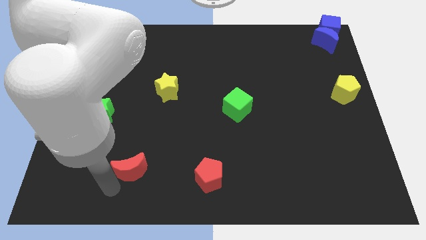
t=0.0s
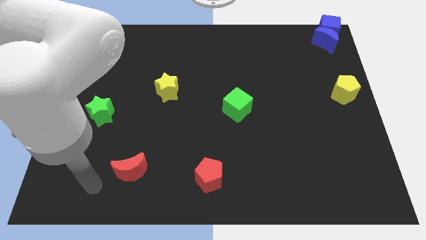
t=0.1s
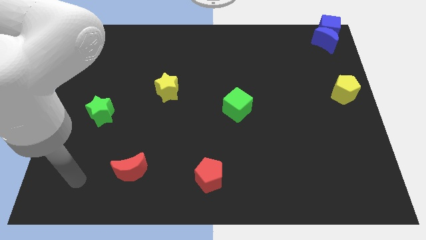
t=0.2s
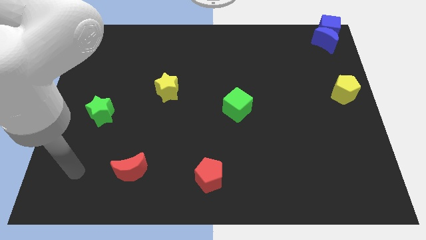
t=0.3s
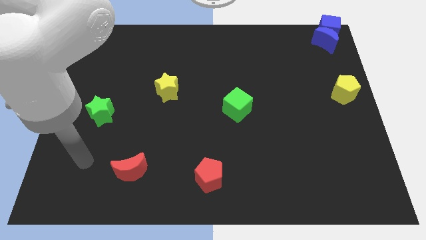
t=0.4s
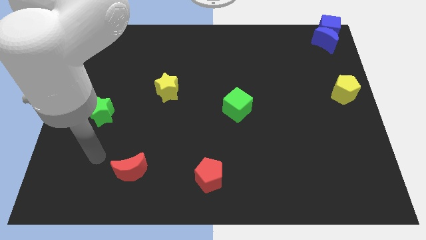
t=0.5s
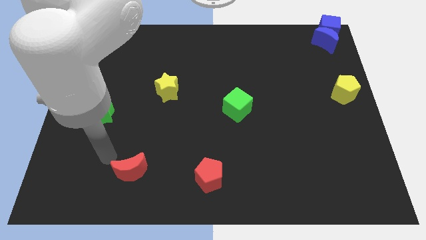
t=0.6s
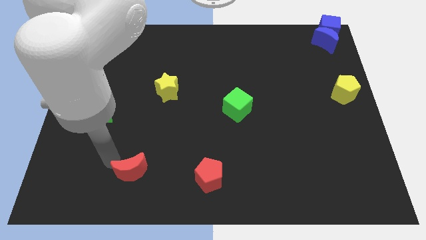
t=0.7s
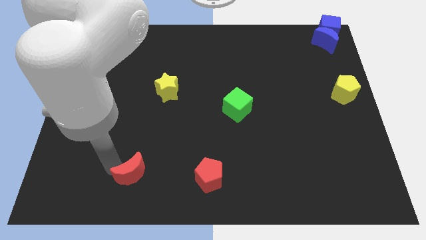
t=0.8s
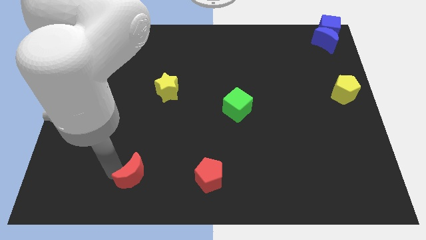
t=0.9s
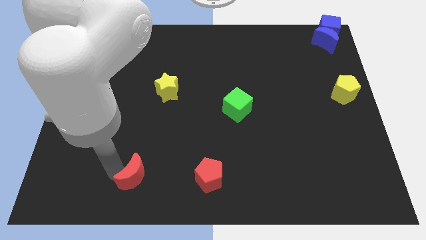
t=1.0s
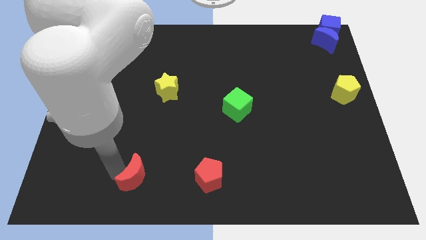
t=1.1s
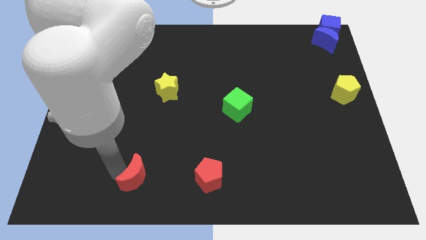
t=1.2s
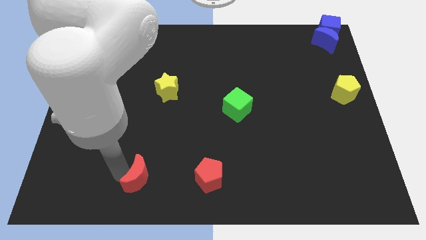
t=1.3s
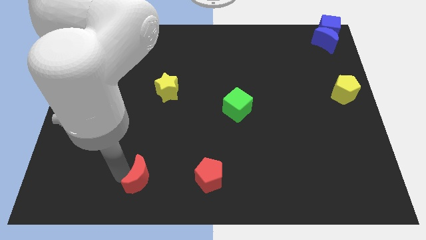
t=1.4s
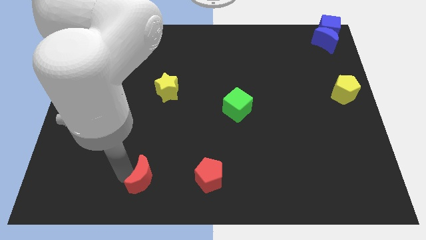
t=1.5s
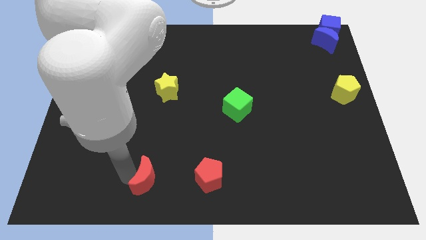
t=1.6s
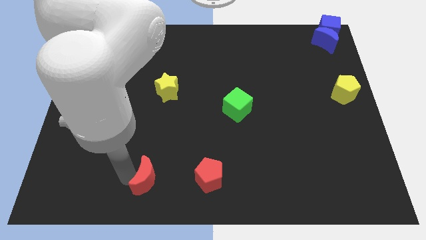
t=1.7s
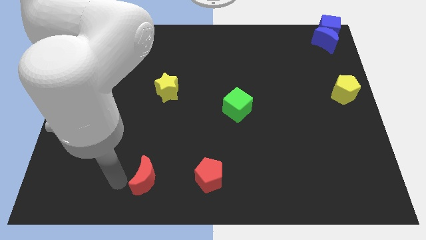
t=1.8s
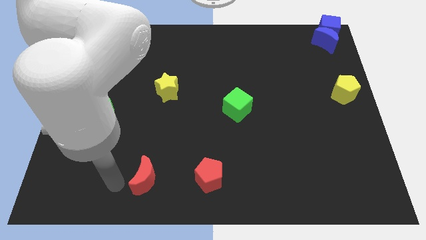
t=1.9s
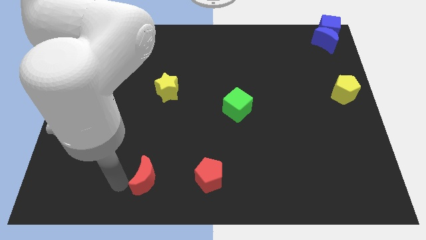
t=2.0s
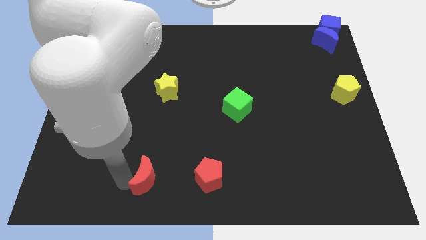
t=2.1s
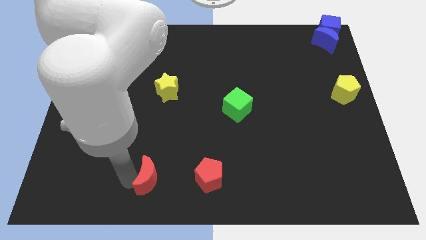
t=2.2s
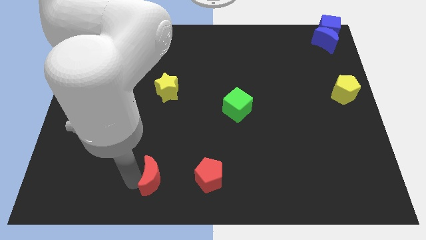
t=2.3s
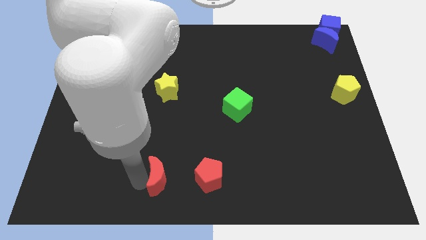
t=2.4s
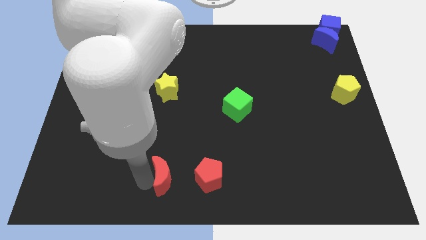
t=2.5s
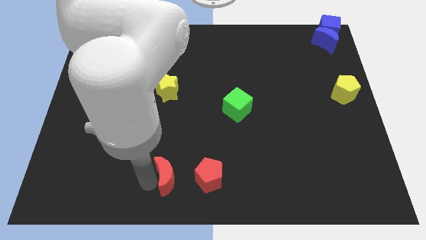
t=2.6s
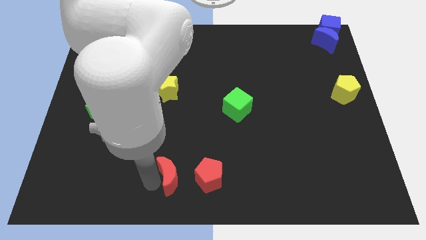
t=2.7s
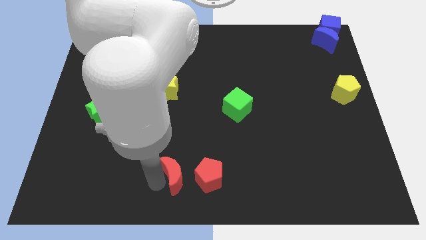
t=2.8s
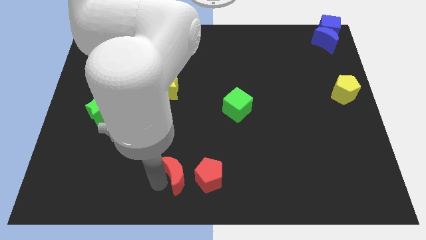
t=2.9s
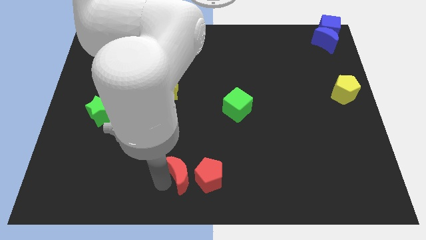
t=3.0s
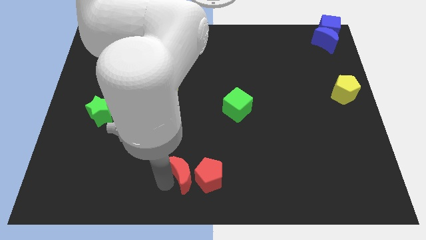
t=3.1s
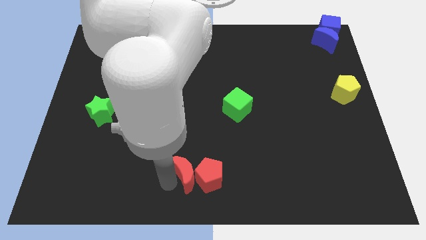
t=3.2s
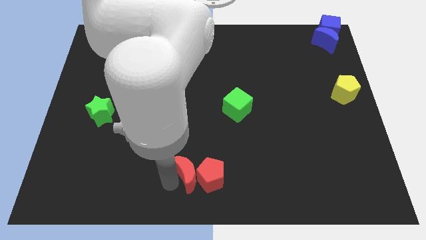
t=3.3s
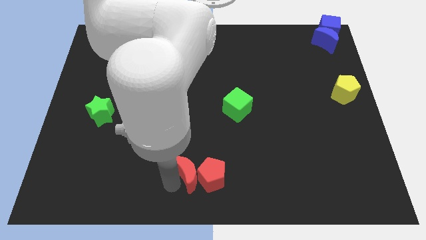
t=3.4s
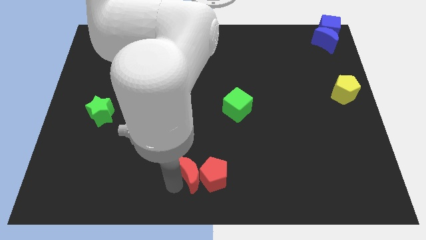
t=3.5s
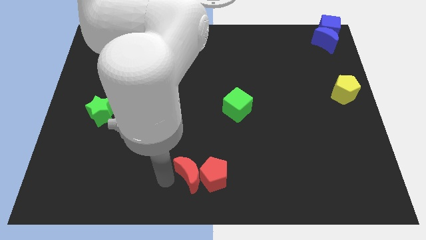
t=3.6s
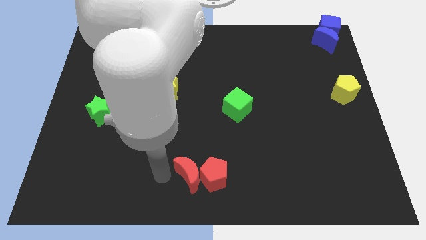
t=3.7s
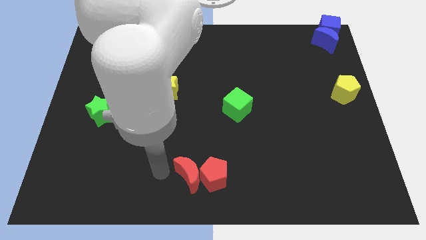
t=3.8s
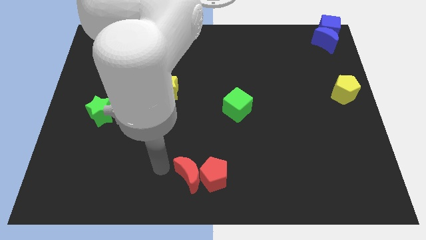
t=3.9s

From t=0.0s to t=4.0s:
place the red moon to the left side of red pentagon

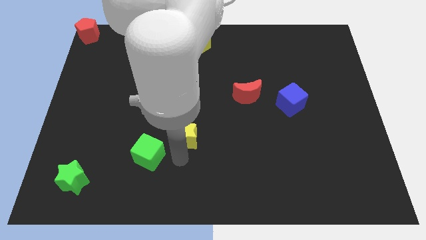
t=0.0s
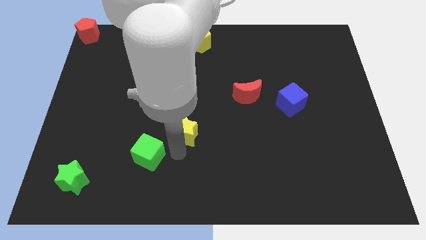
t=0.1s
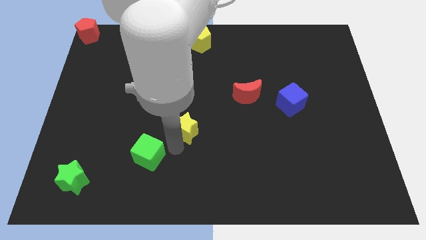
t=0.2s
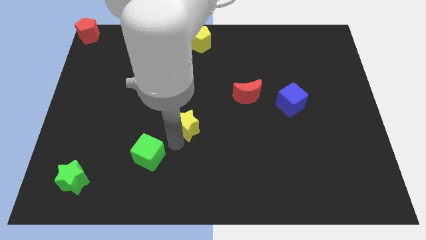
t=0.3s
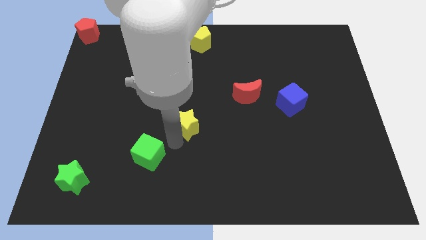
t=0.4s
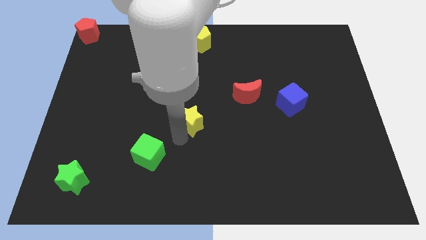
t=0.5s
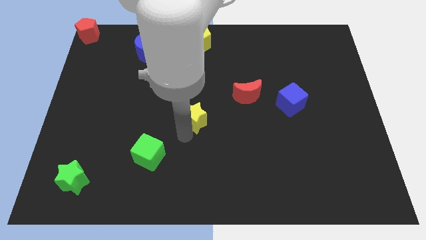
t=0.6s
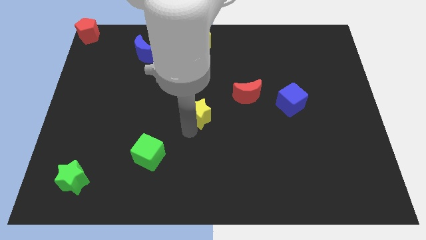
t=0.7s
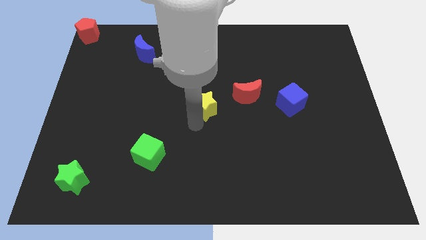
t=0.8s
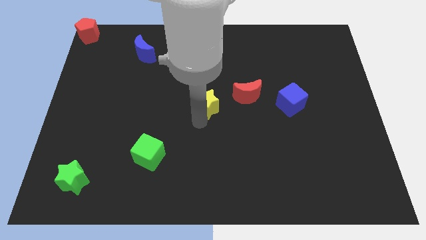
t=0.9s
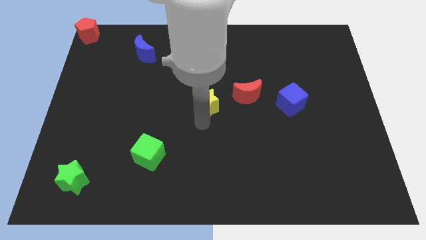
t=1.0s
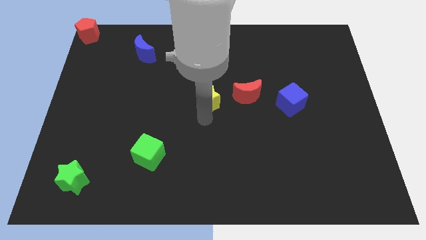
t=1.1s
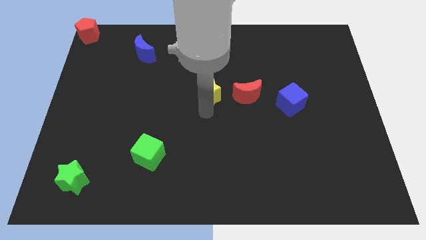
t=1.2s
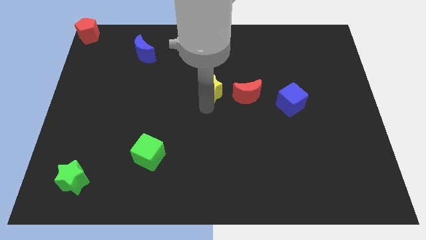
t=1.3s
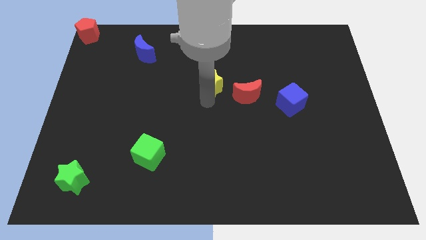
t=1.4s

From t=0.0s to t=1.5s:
push the yellow star to the left of the red crescent

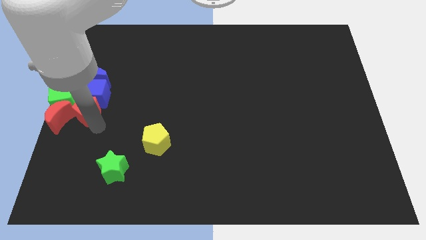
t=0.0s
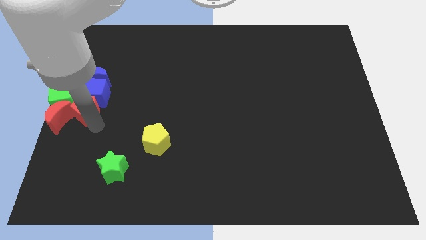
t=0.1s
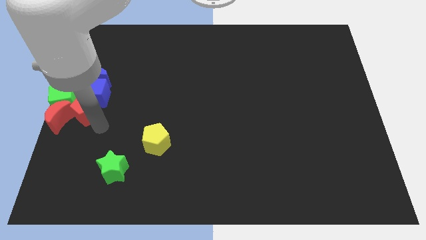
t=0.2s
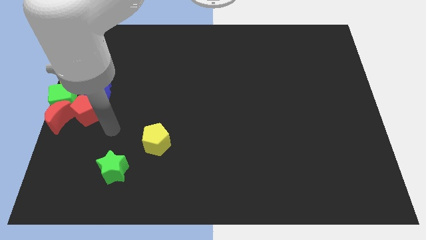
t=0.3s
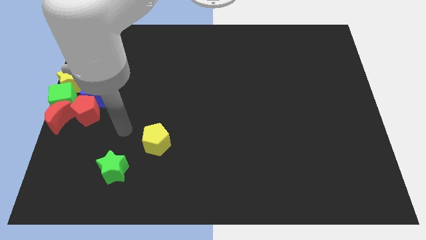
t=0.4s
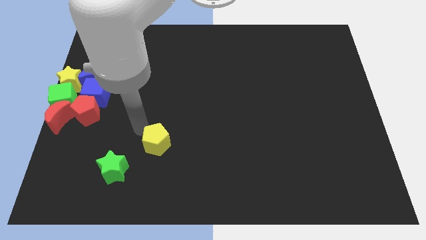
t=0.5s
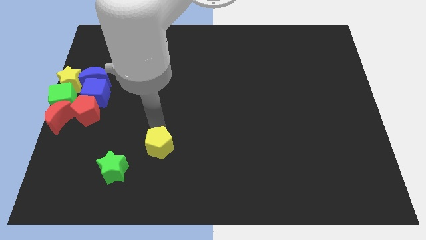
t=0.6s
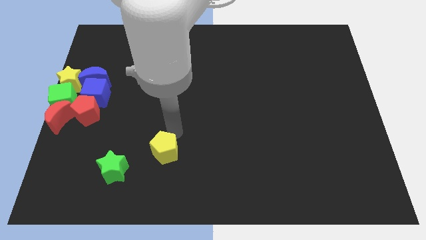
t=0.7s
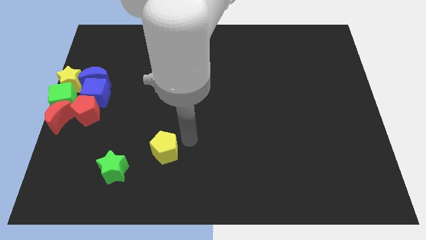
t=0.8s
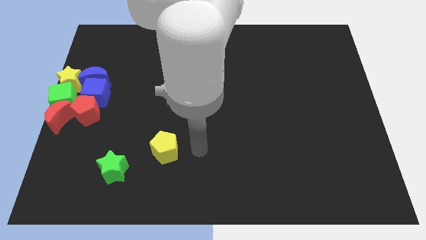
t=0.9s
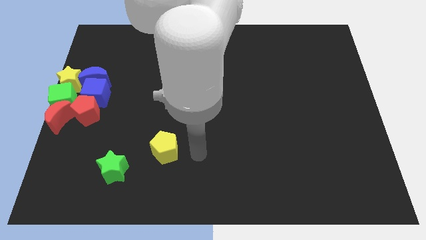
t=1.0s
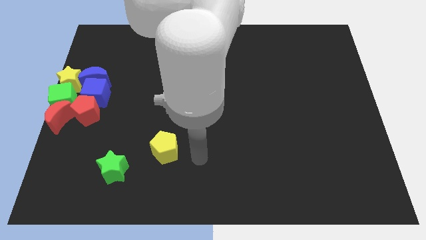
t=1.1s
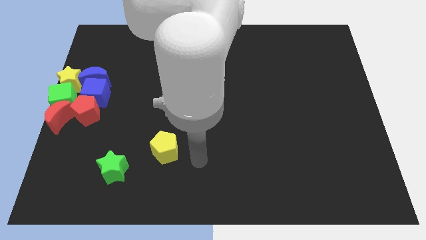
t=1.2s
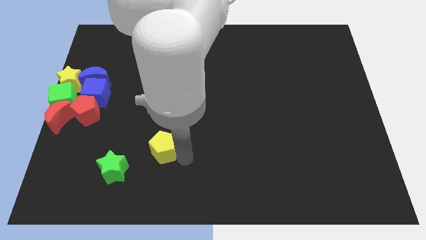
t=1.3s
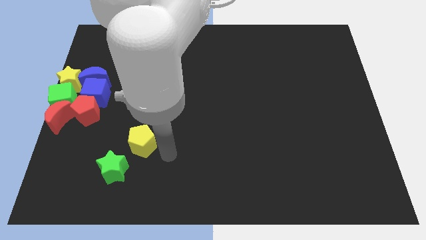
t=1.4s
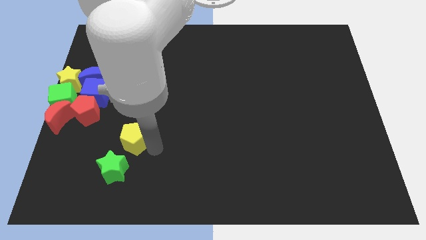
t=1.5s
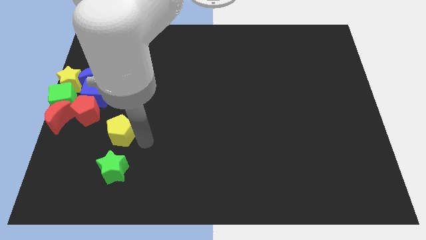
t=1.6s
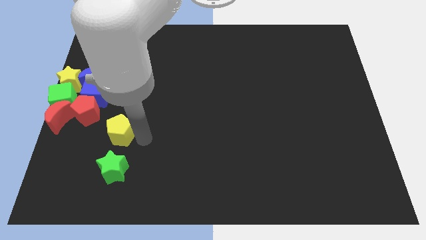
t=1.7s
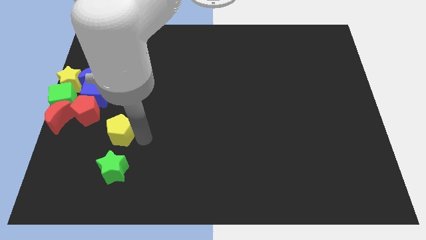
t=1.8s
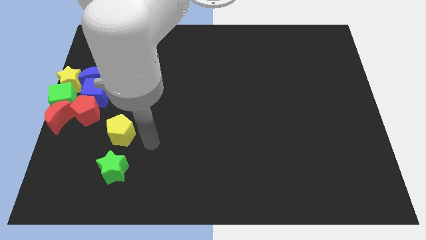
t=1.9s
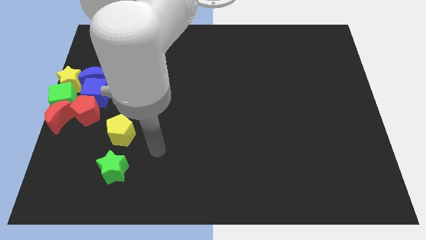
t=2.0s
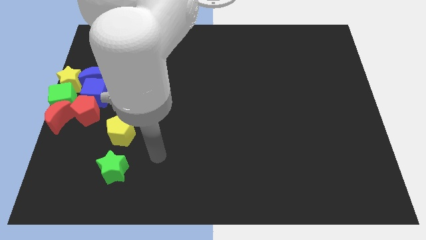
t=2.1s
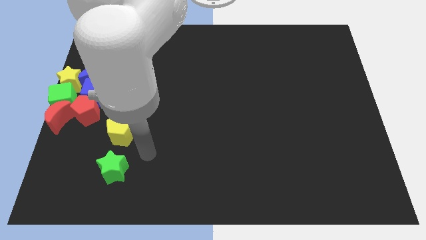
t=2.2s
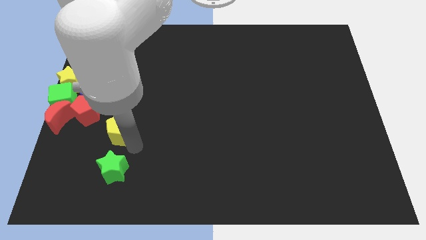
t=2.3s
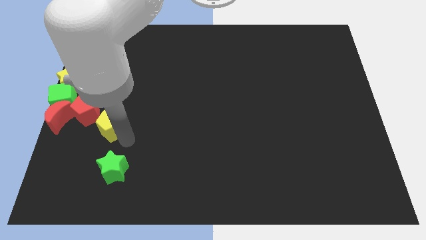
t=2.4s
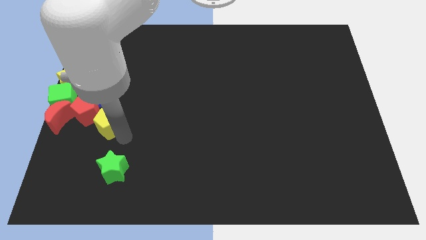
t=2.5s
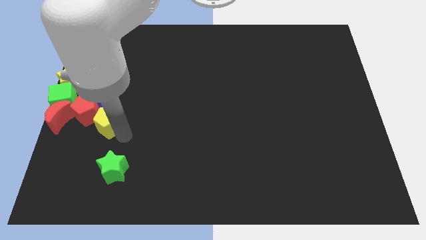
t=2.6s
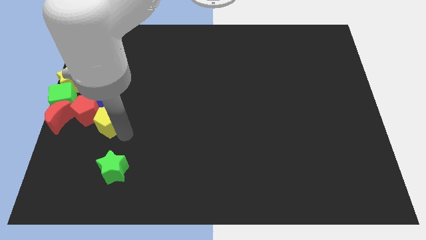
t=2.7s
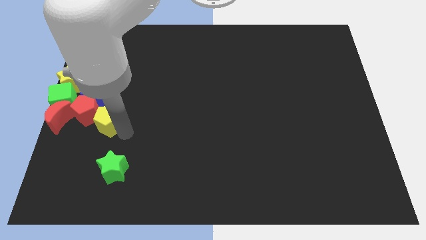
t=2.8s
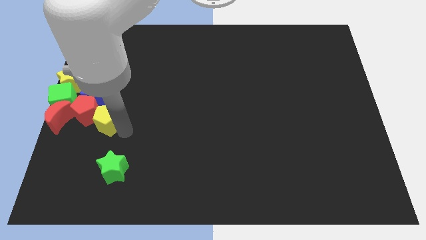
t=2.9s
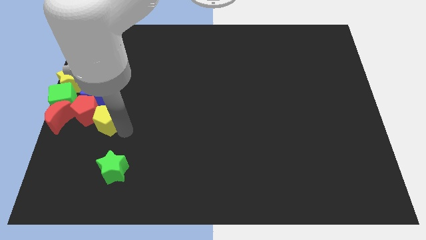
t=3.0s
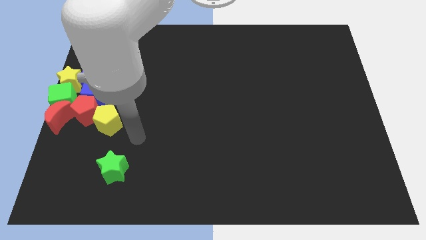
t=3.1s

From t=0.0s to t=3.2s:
move the yellow pentagon into a group of blocks

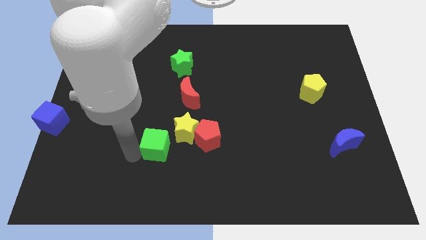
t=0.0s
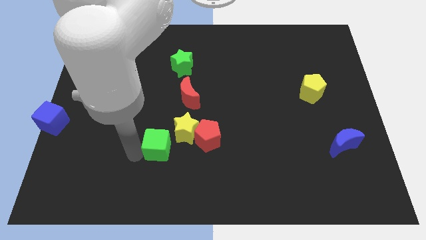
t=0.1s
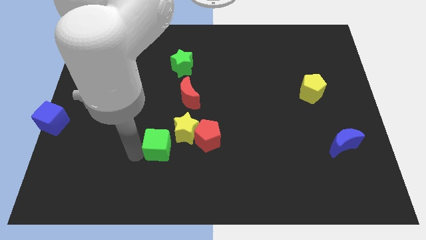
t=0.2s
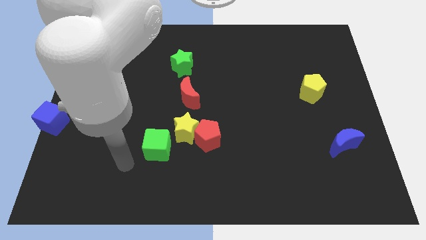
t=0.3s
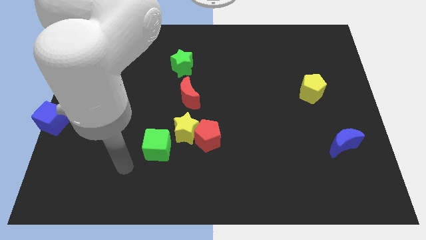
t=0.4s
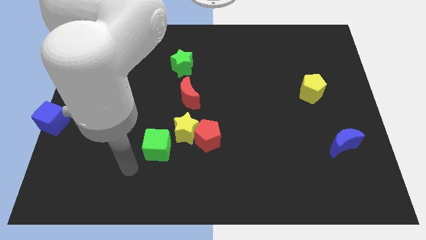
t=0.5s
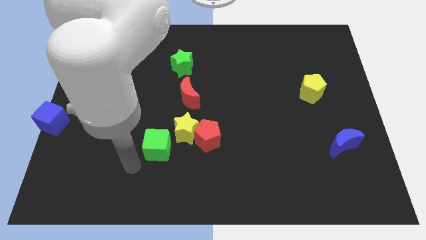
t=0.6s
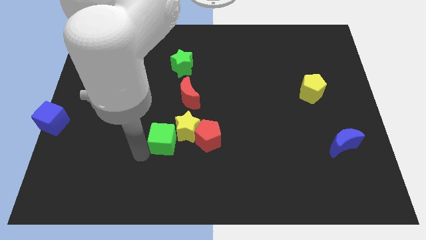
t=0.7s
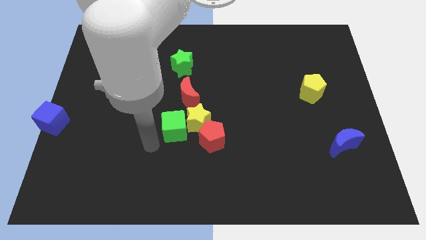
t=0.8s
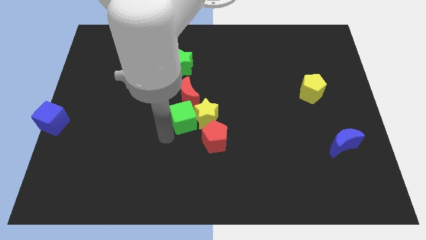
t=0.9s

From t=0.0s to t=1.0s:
push green cube in to yellow star
